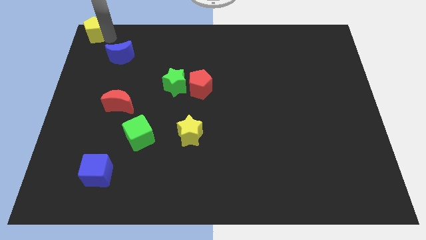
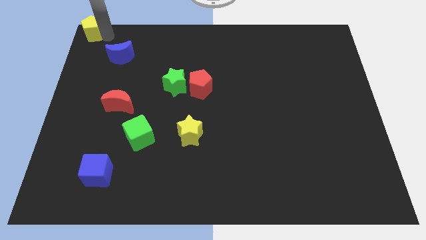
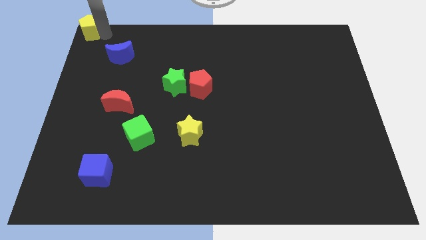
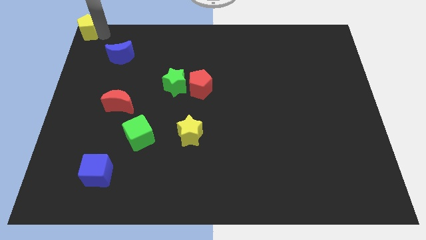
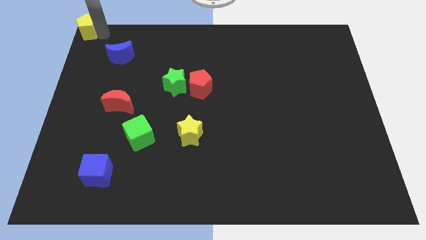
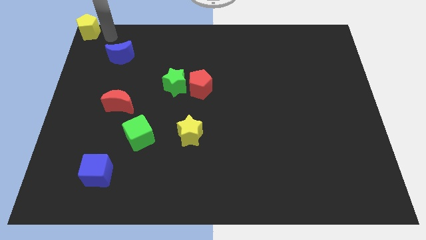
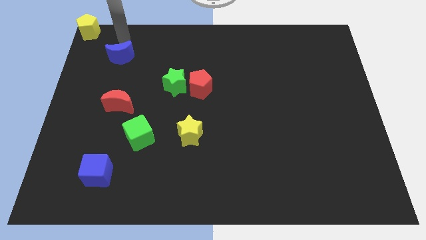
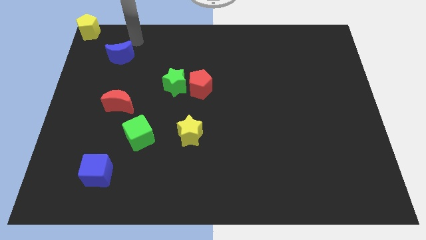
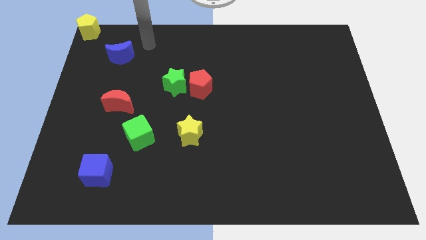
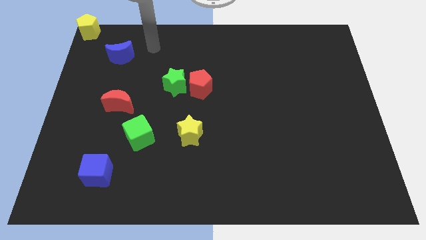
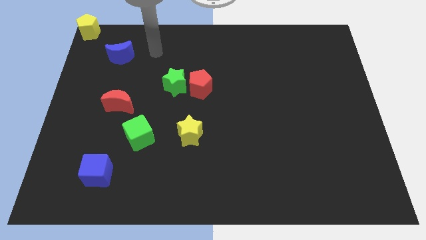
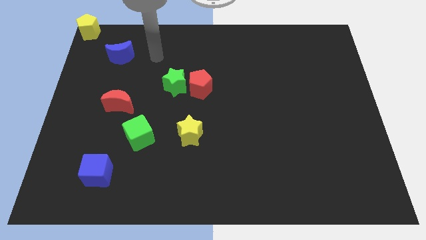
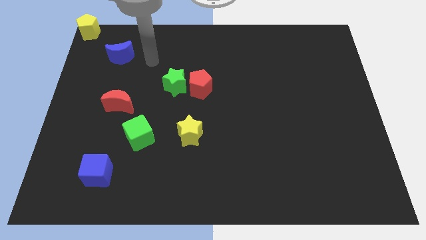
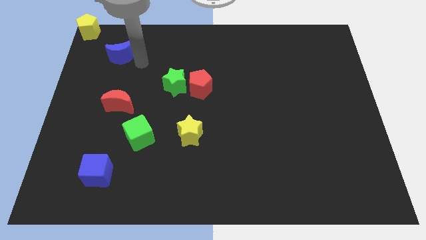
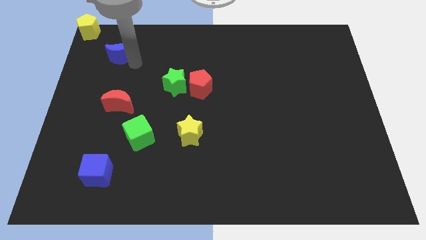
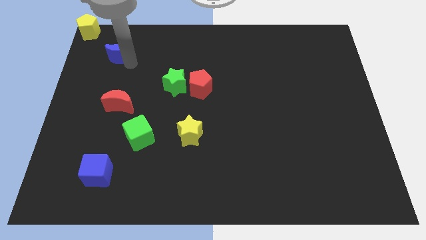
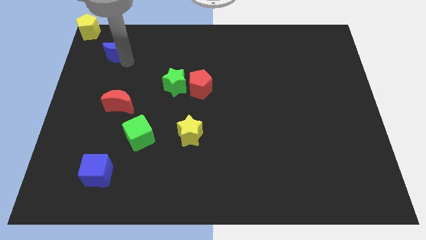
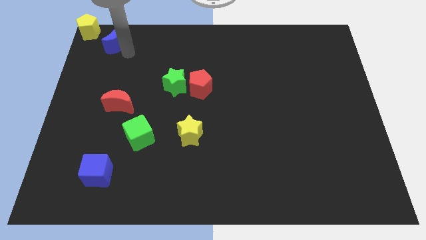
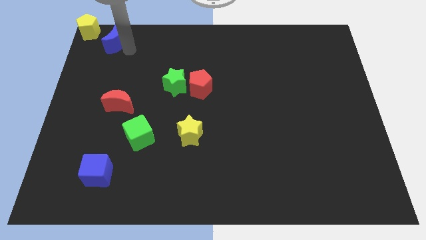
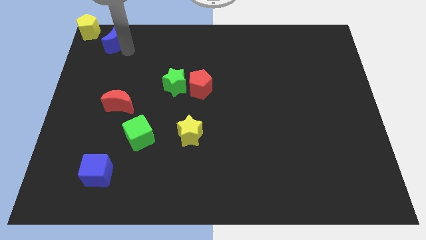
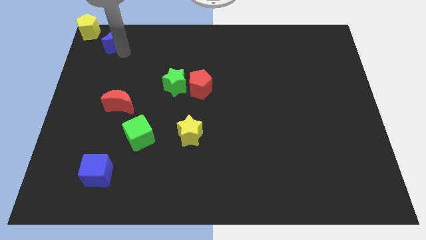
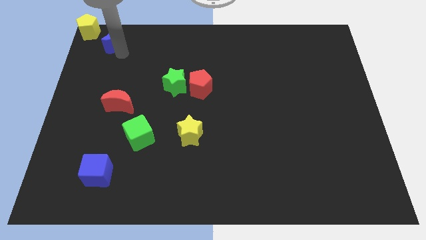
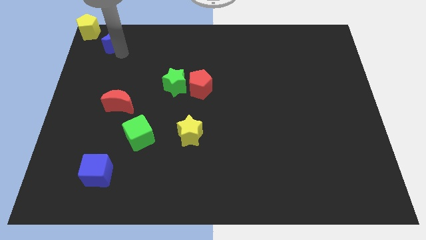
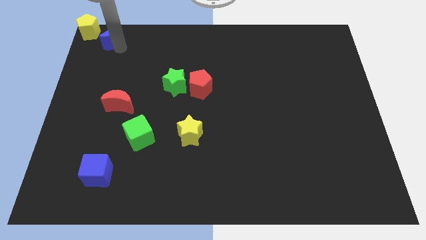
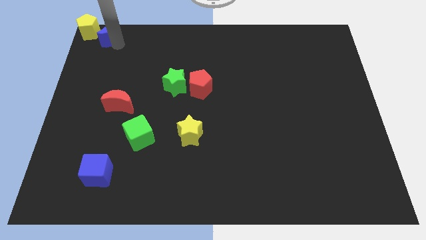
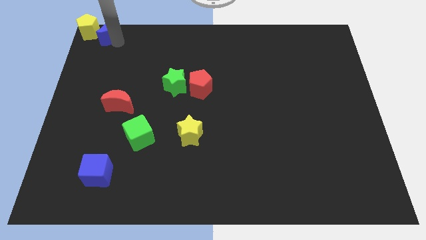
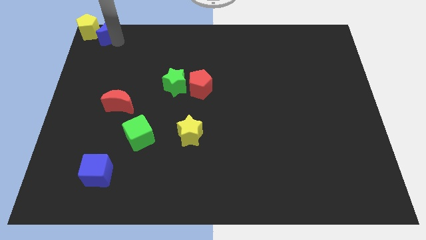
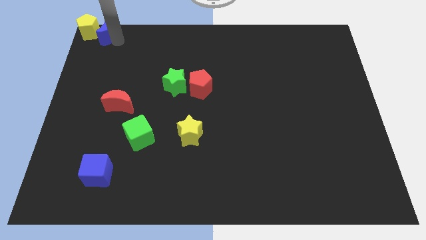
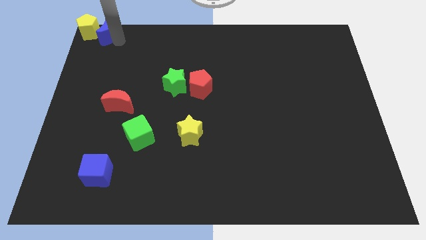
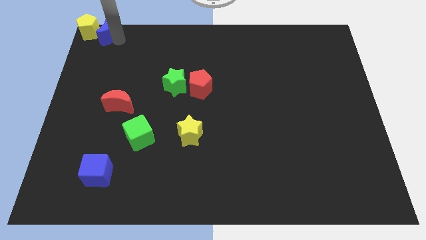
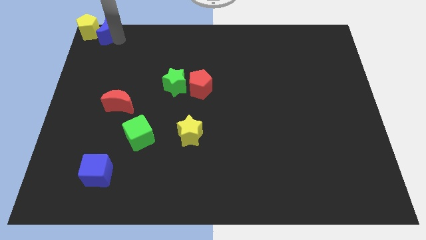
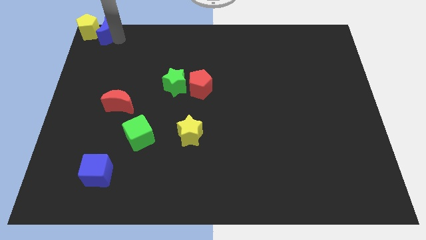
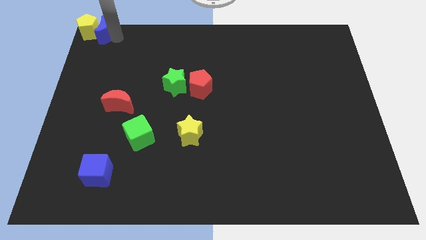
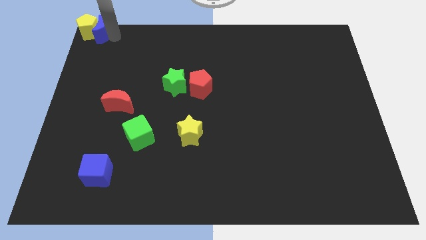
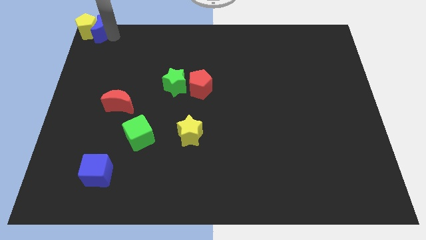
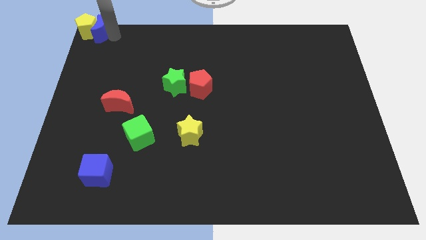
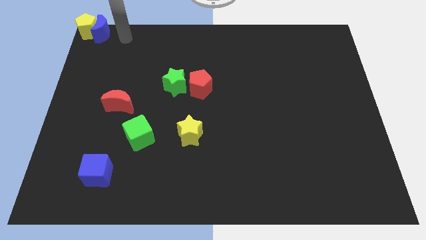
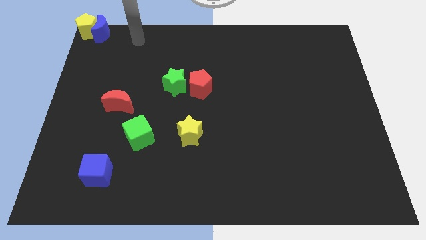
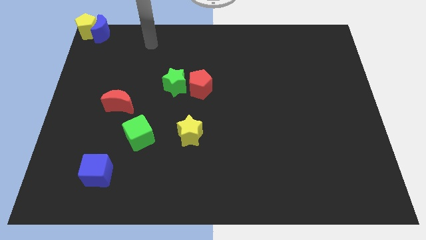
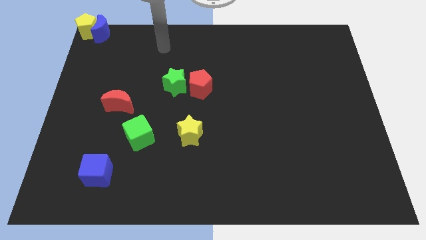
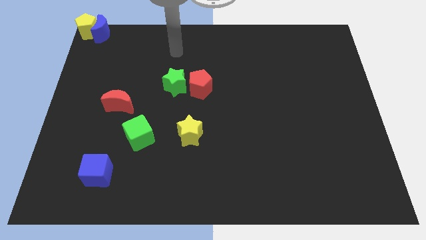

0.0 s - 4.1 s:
push the blue moon into the yellow pentagon

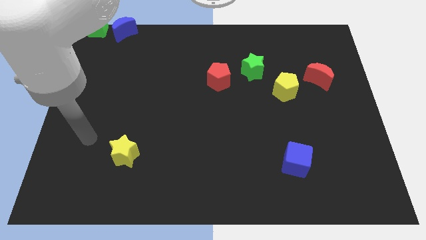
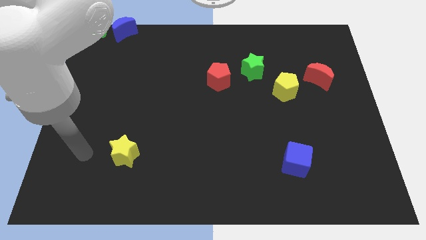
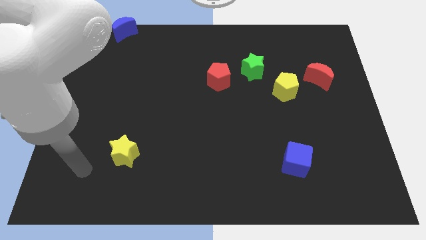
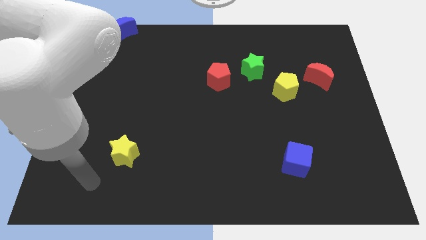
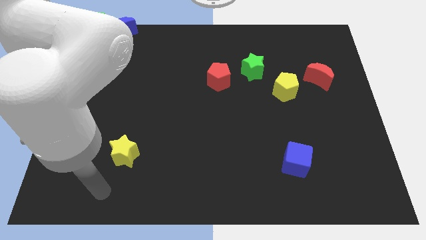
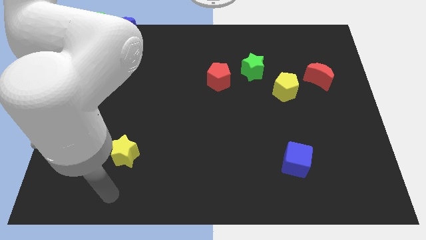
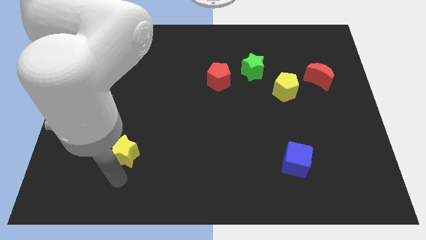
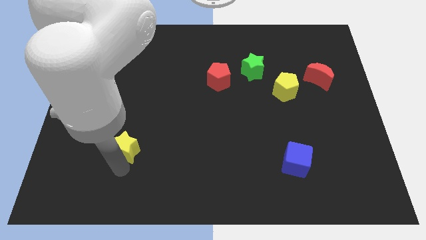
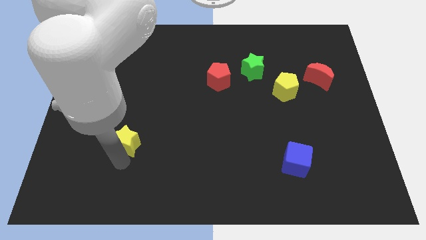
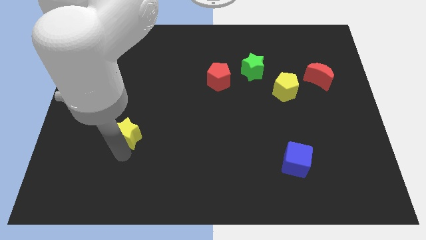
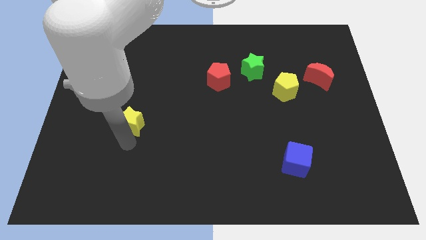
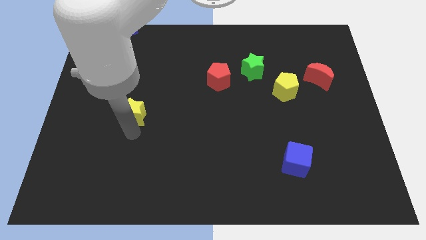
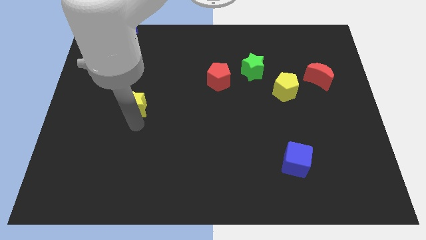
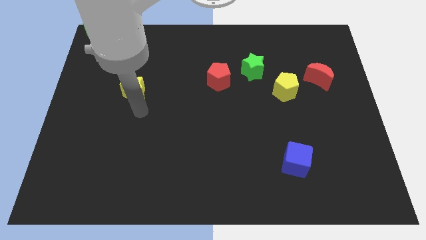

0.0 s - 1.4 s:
push the yellow star diagonally top left to the blue cube

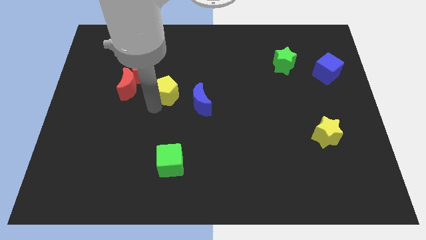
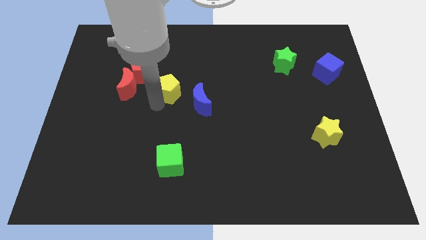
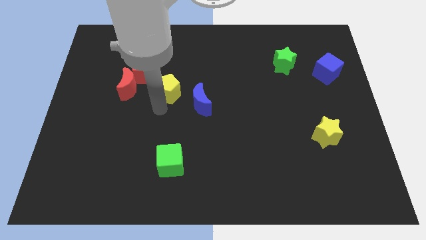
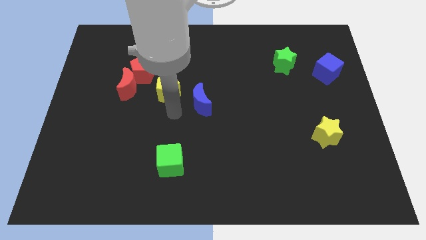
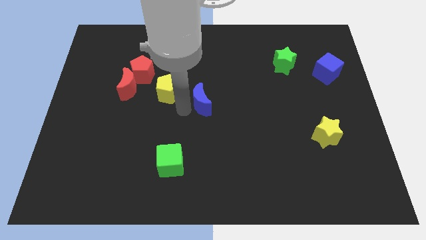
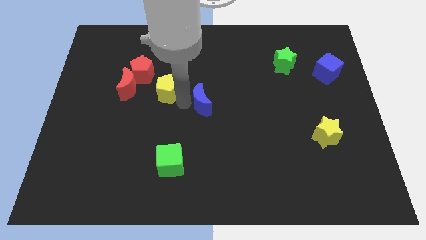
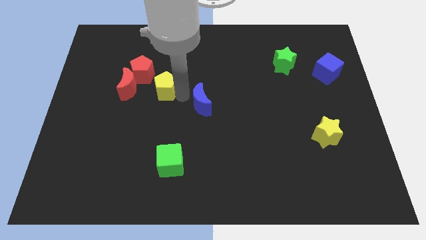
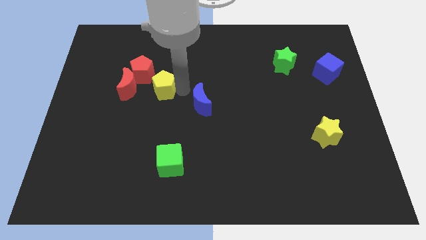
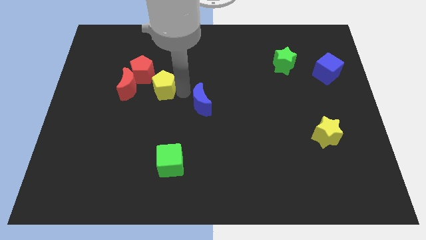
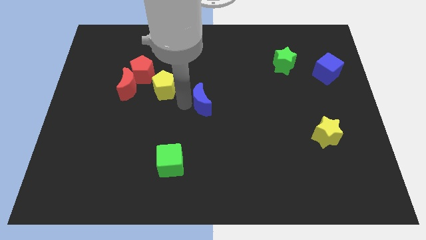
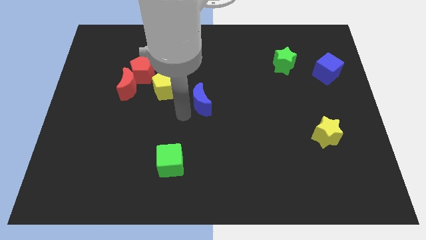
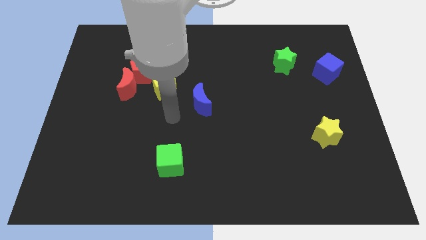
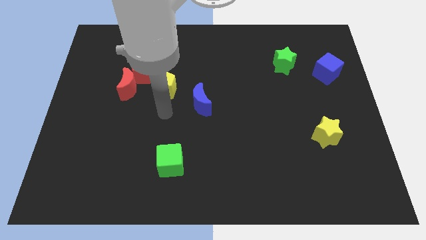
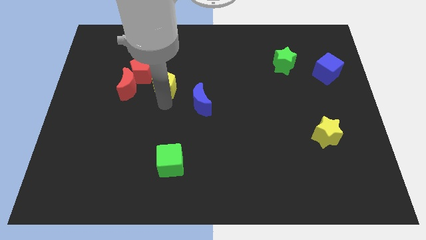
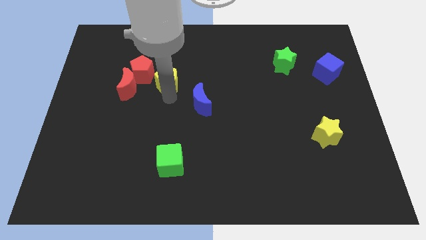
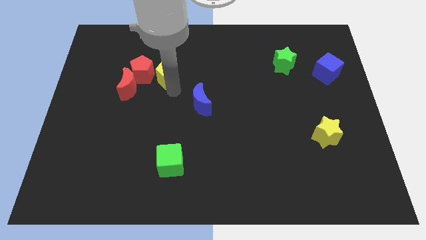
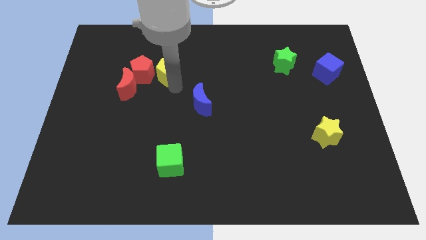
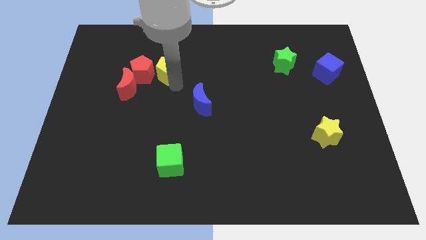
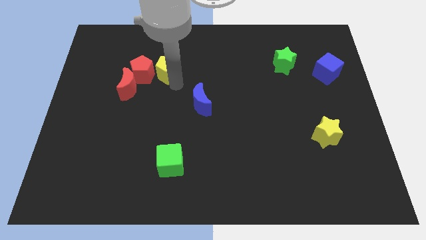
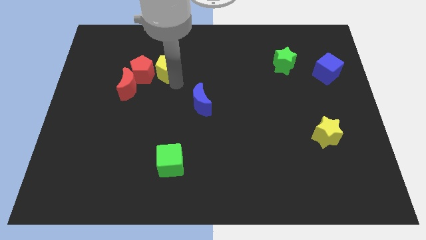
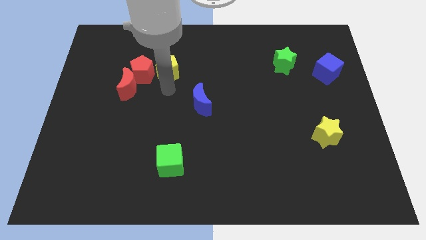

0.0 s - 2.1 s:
slide the yellow pentagon to the top side

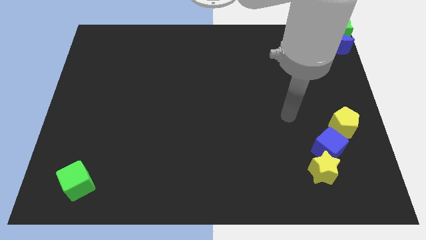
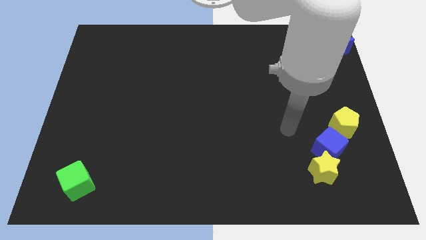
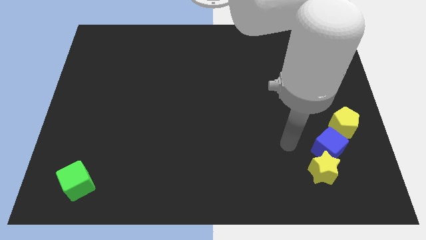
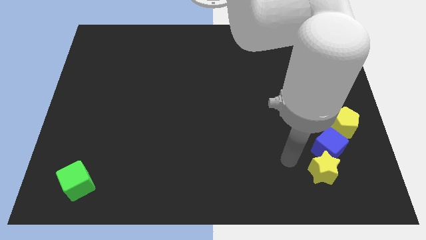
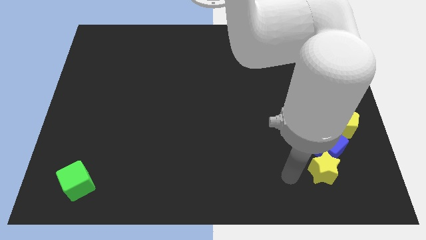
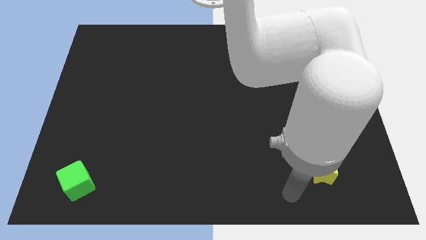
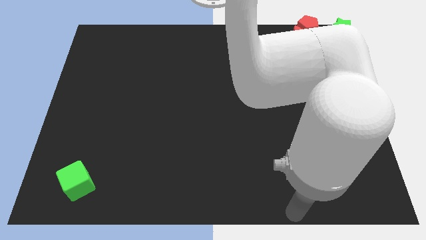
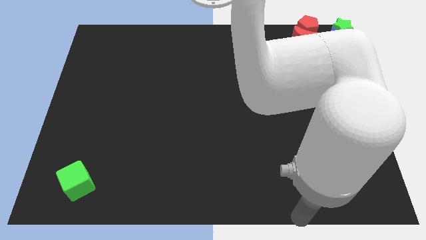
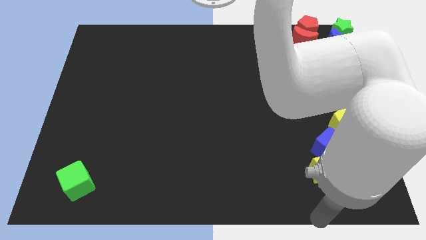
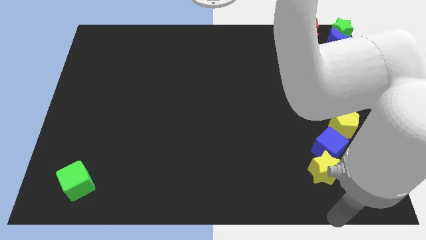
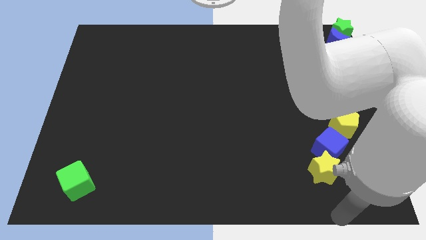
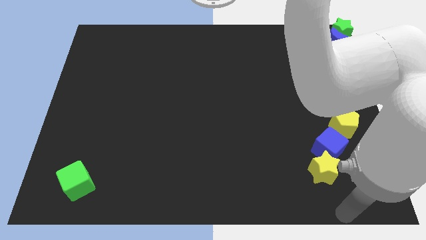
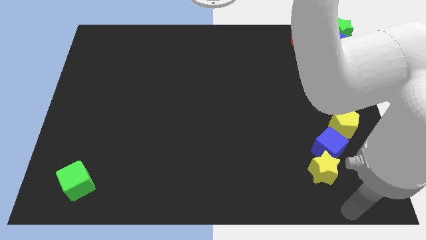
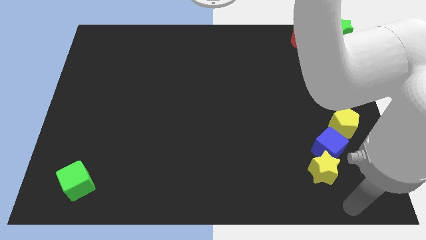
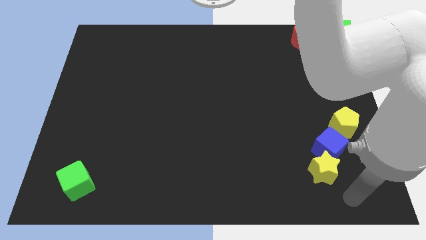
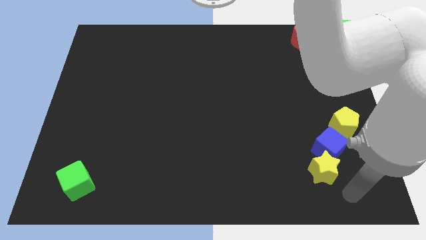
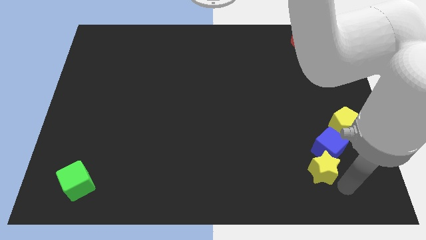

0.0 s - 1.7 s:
move the arm towards the yellow star
